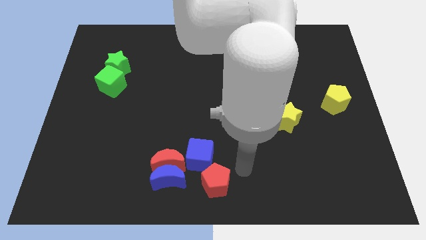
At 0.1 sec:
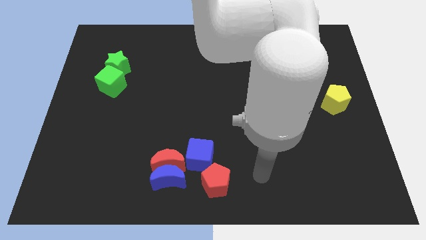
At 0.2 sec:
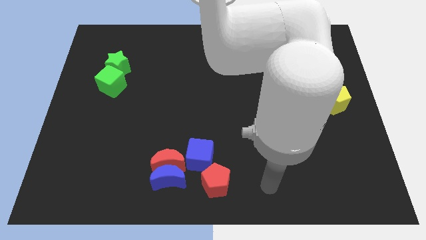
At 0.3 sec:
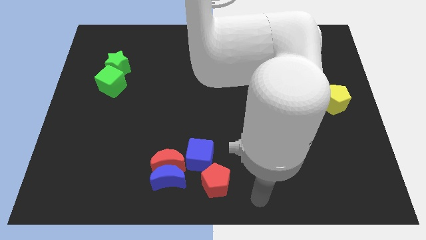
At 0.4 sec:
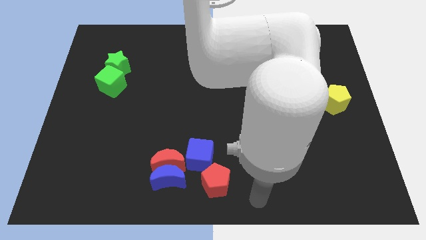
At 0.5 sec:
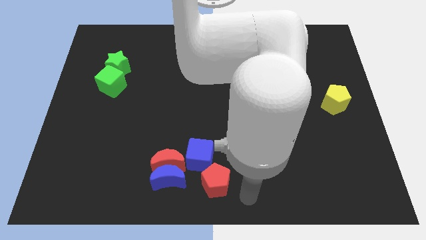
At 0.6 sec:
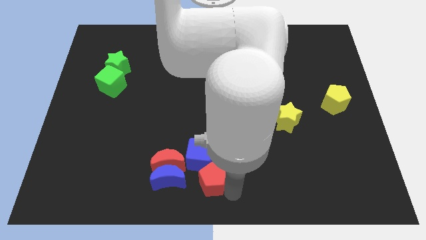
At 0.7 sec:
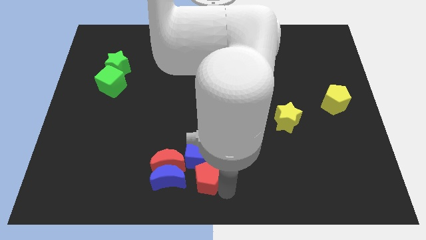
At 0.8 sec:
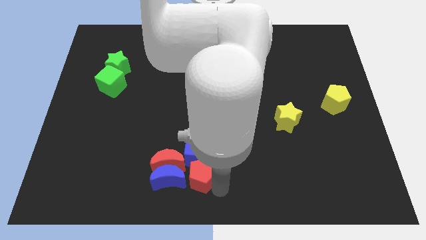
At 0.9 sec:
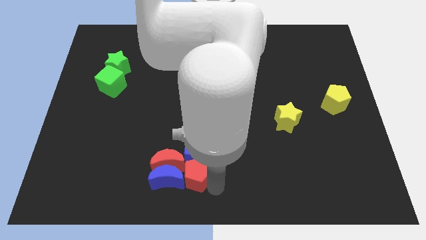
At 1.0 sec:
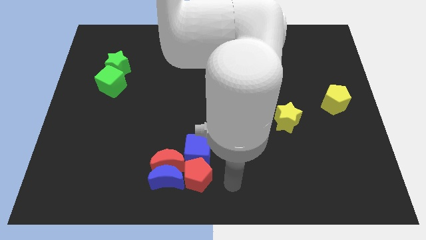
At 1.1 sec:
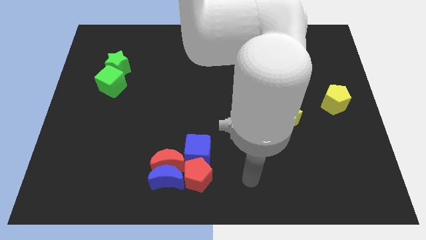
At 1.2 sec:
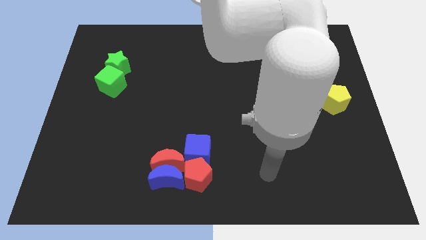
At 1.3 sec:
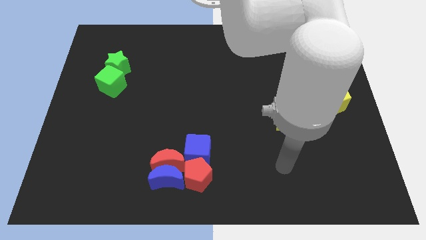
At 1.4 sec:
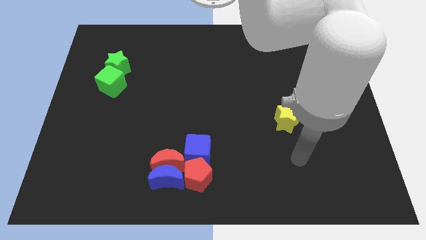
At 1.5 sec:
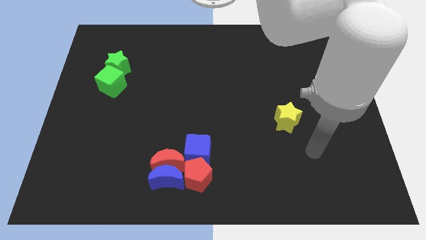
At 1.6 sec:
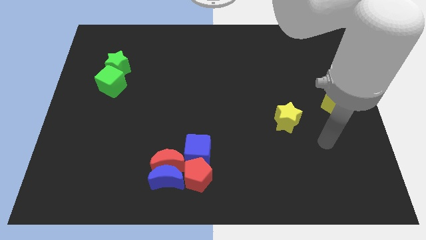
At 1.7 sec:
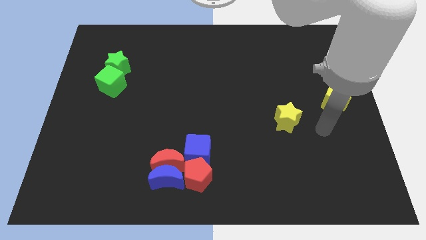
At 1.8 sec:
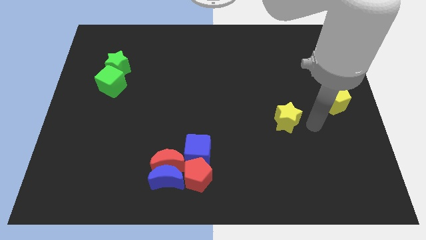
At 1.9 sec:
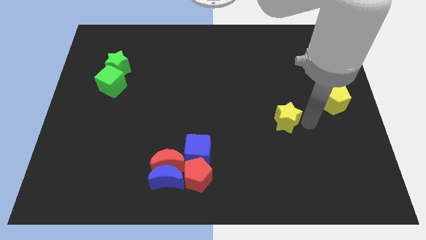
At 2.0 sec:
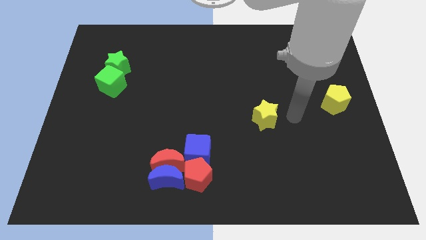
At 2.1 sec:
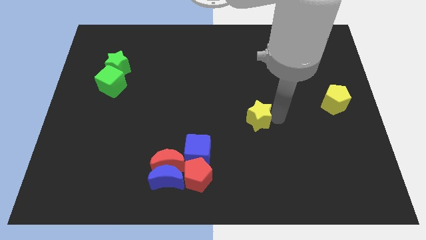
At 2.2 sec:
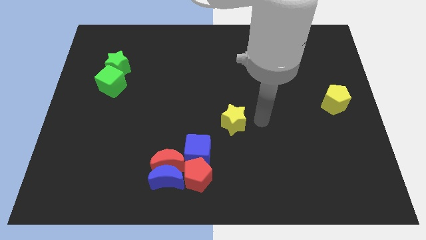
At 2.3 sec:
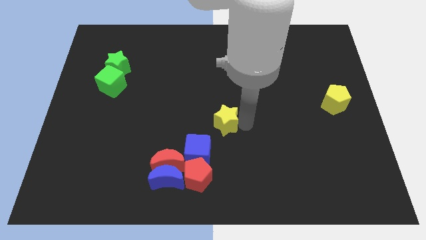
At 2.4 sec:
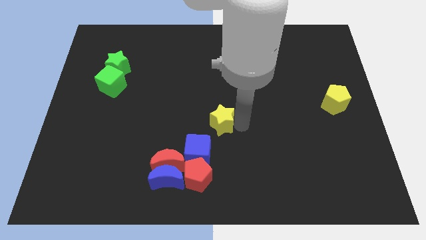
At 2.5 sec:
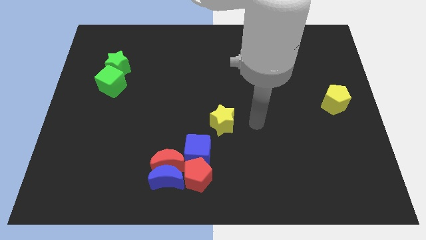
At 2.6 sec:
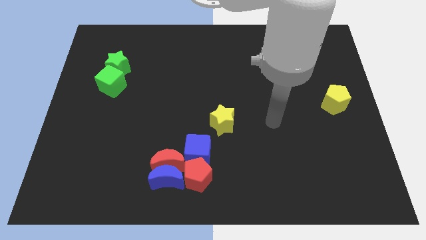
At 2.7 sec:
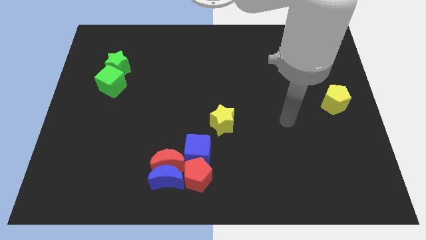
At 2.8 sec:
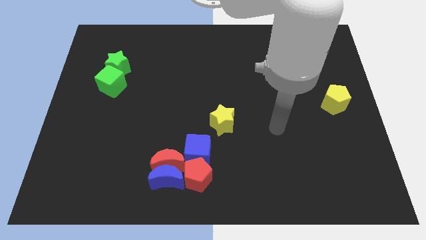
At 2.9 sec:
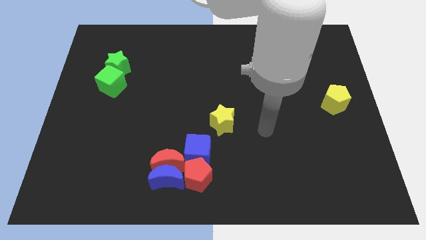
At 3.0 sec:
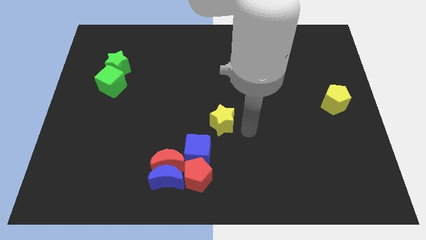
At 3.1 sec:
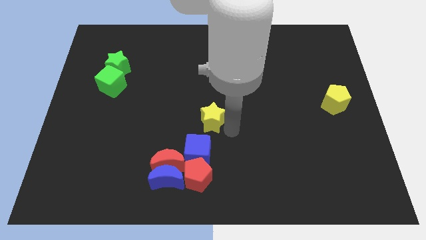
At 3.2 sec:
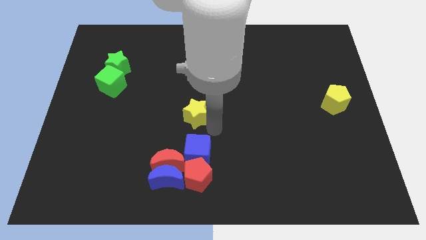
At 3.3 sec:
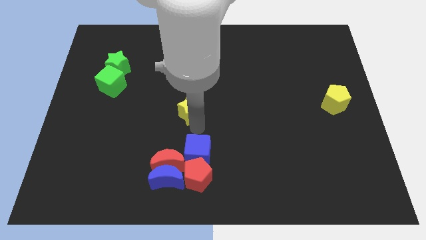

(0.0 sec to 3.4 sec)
place the yellow star above the blue cube

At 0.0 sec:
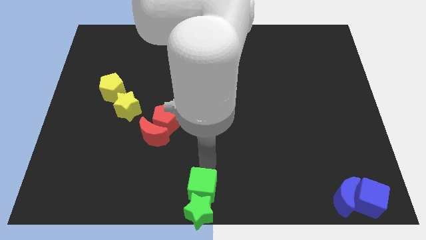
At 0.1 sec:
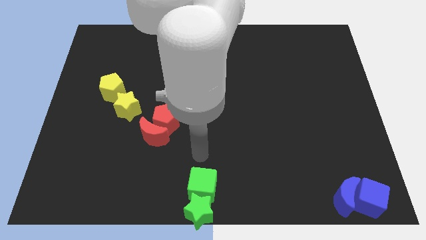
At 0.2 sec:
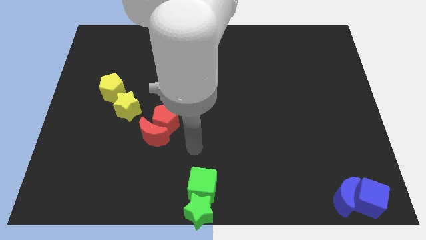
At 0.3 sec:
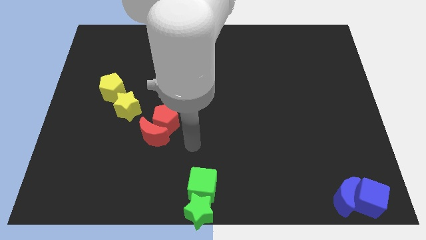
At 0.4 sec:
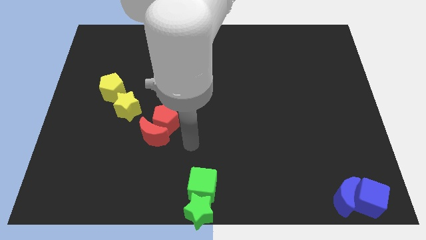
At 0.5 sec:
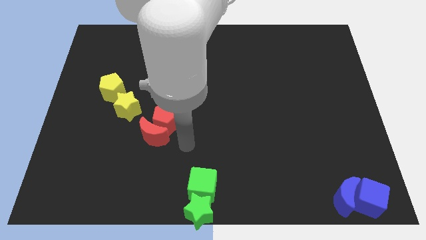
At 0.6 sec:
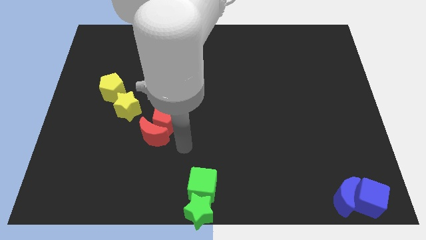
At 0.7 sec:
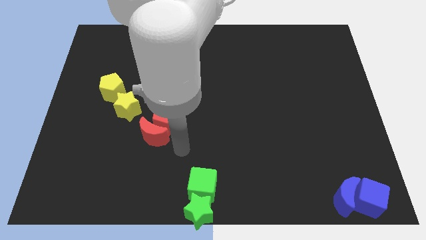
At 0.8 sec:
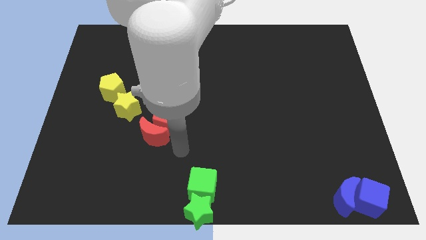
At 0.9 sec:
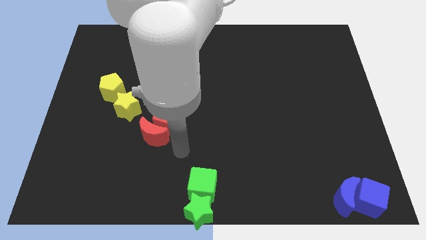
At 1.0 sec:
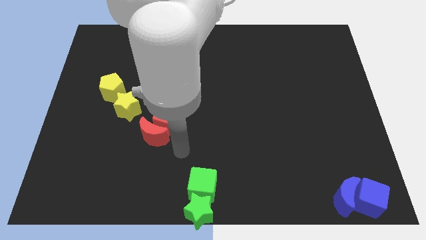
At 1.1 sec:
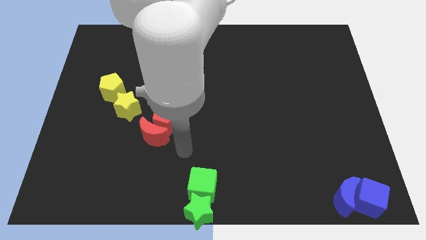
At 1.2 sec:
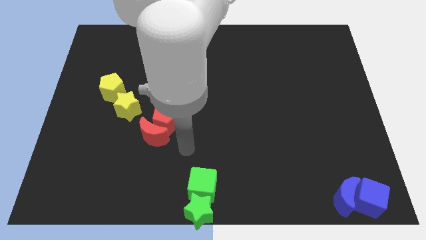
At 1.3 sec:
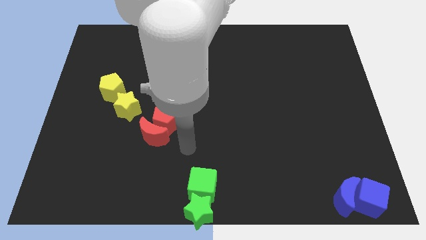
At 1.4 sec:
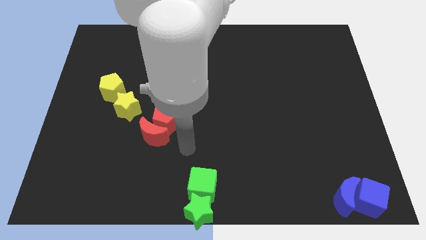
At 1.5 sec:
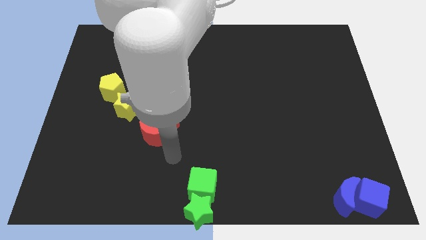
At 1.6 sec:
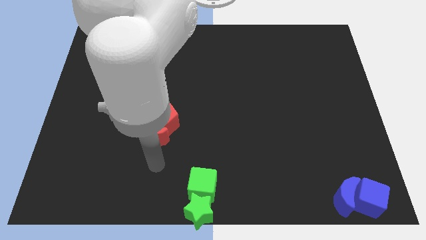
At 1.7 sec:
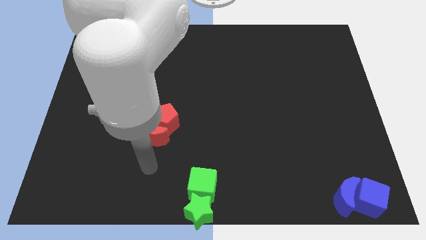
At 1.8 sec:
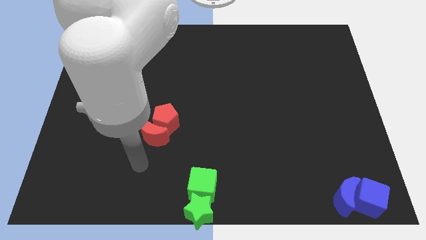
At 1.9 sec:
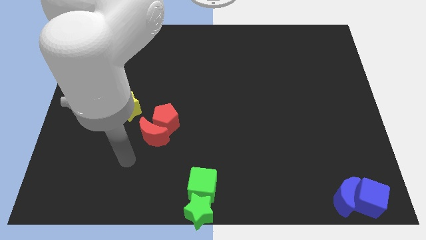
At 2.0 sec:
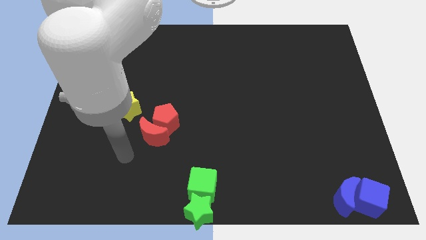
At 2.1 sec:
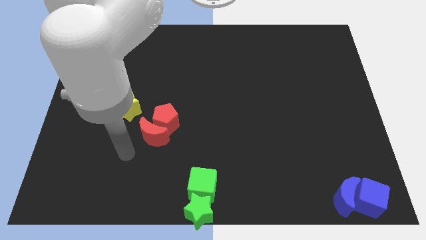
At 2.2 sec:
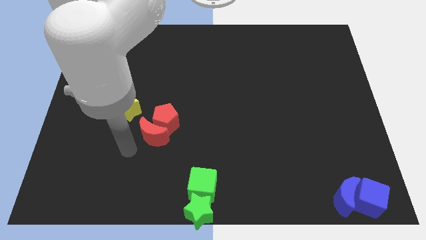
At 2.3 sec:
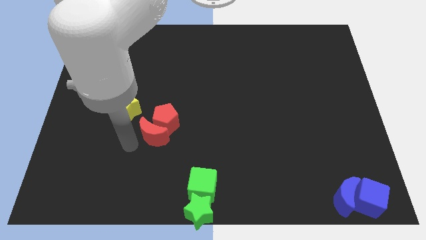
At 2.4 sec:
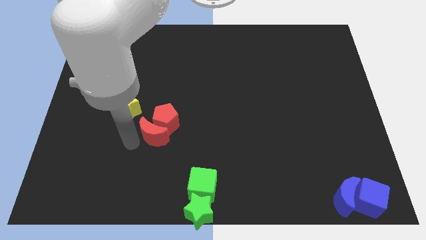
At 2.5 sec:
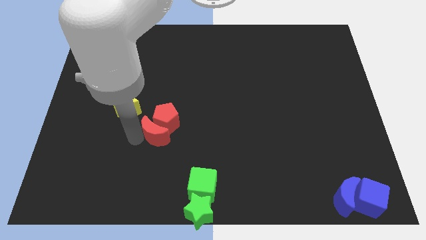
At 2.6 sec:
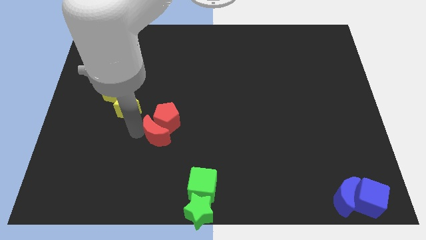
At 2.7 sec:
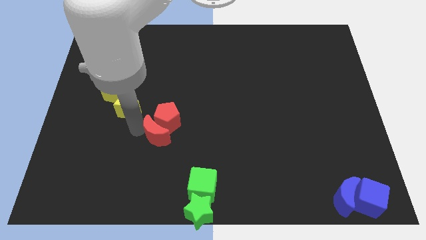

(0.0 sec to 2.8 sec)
slightly push the red moon along with the red pentagon

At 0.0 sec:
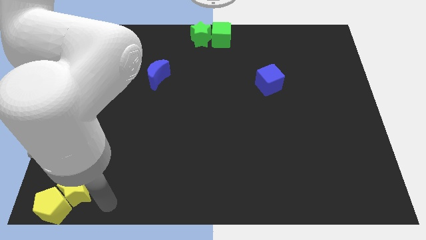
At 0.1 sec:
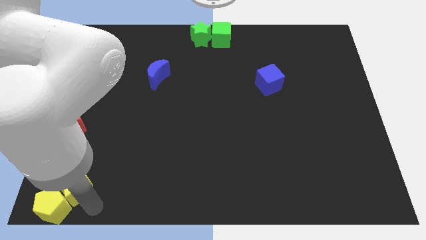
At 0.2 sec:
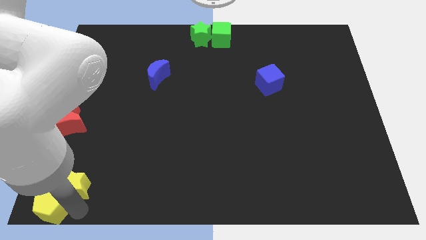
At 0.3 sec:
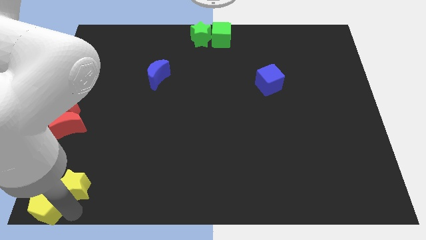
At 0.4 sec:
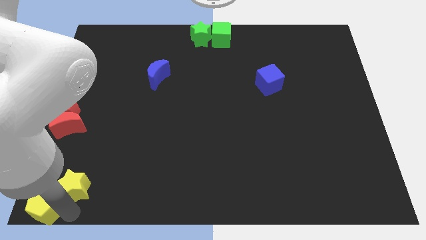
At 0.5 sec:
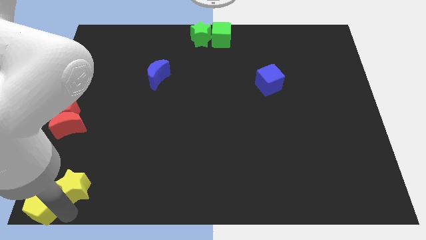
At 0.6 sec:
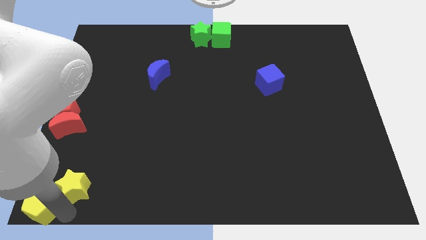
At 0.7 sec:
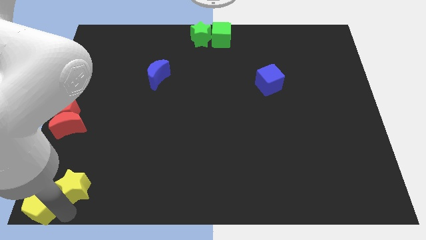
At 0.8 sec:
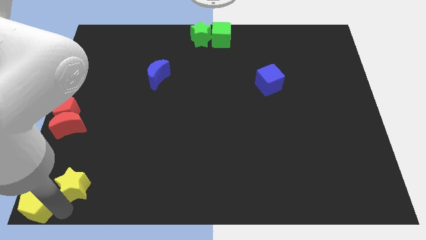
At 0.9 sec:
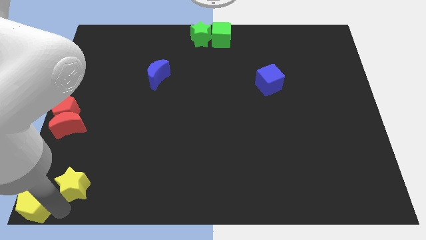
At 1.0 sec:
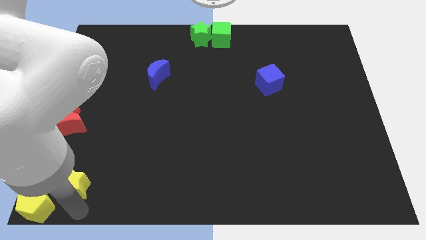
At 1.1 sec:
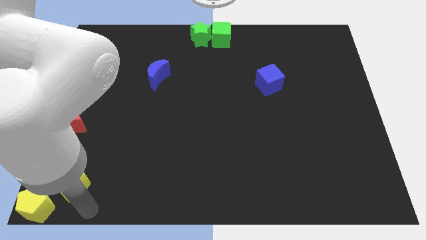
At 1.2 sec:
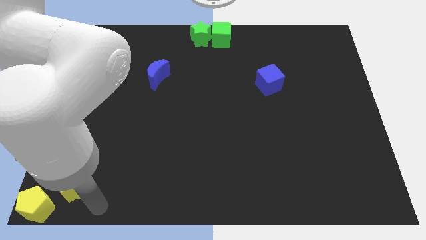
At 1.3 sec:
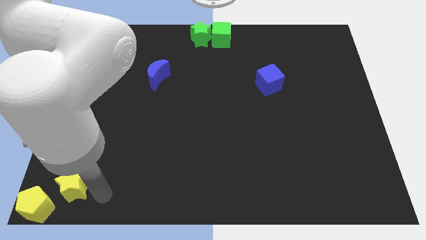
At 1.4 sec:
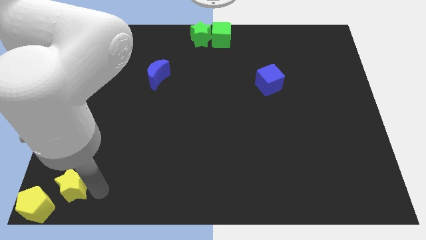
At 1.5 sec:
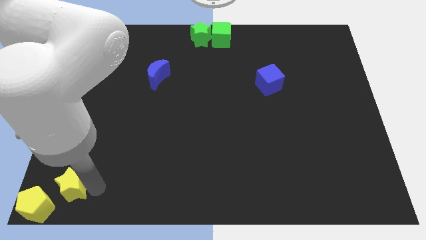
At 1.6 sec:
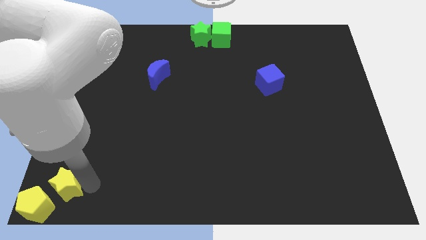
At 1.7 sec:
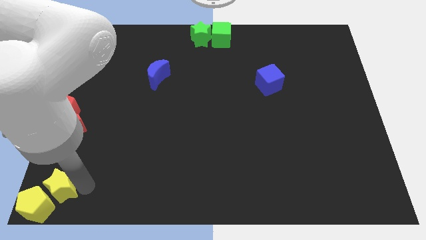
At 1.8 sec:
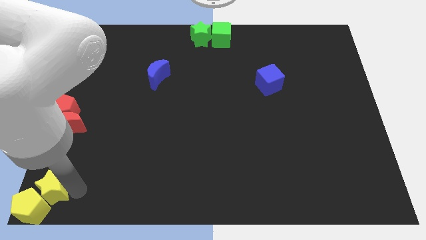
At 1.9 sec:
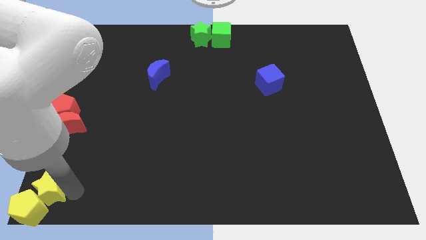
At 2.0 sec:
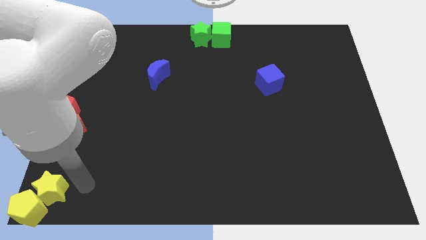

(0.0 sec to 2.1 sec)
push both the yellow blocks to the bottom left corner of the board

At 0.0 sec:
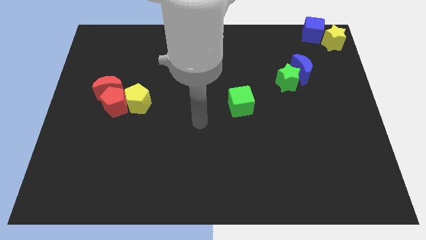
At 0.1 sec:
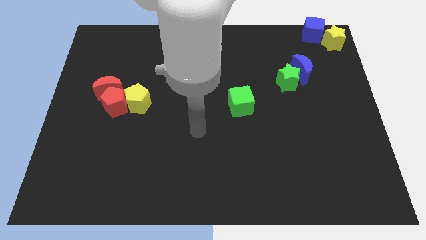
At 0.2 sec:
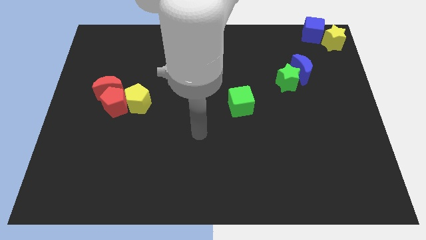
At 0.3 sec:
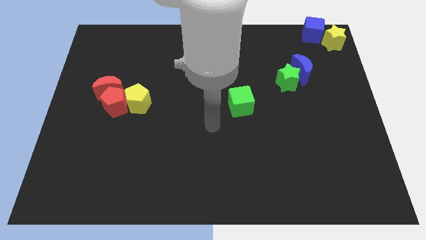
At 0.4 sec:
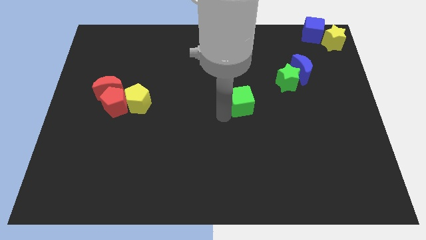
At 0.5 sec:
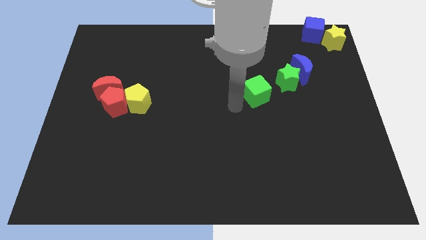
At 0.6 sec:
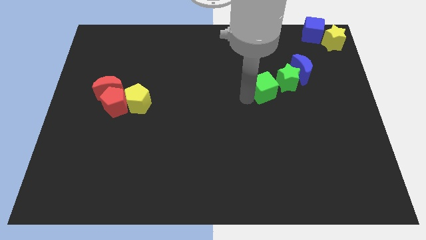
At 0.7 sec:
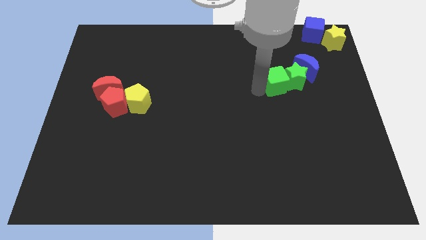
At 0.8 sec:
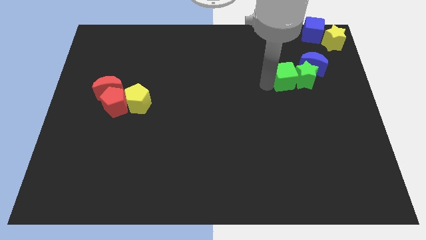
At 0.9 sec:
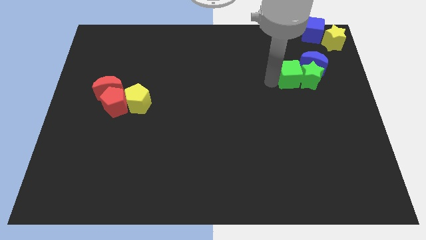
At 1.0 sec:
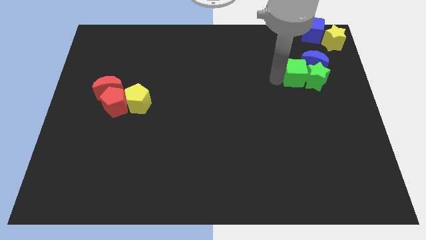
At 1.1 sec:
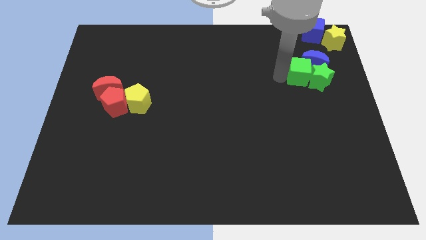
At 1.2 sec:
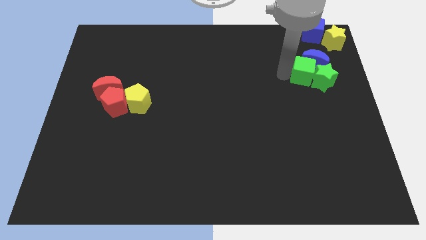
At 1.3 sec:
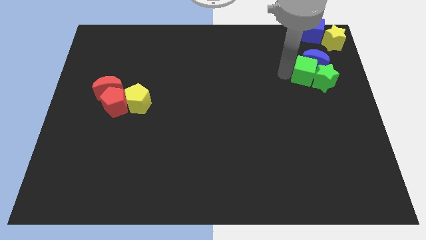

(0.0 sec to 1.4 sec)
slide the green cube into the green star and blue moon
